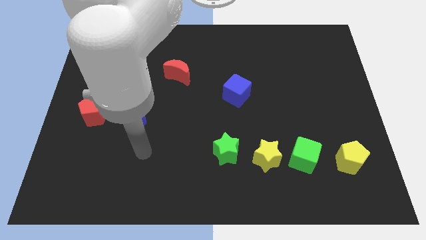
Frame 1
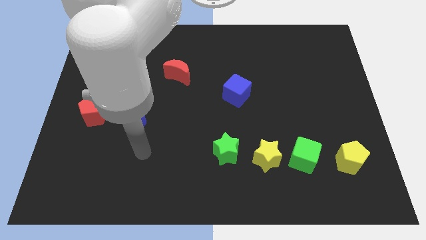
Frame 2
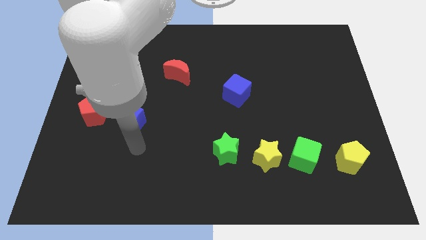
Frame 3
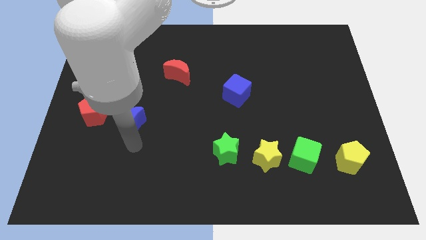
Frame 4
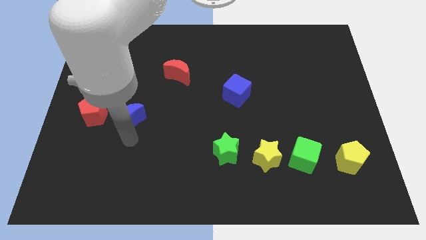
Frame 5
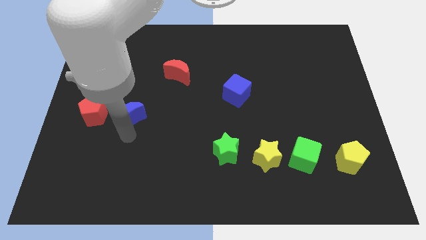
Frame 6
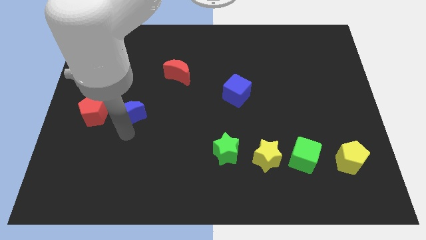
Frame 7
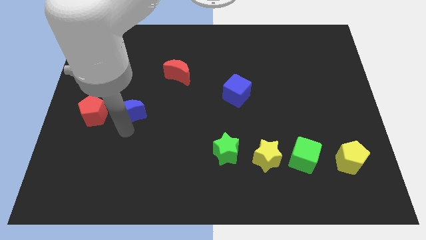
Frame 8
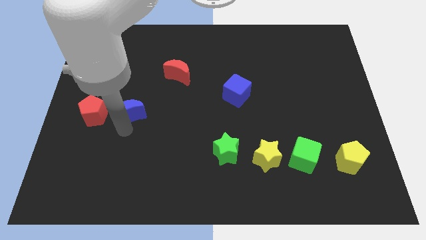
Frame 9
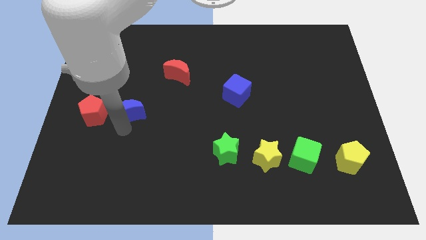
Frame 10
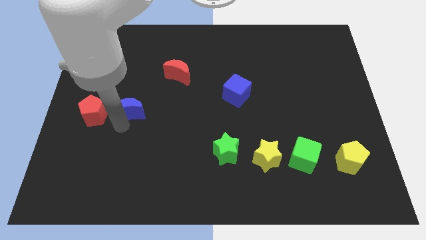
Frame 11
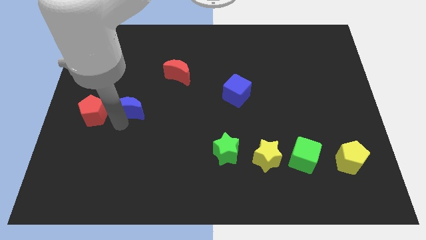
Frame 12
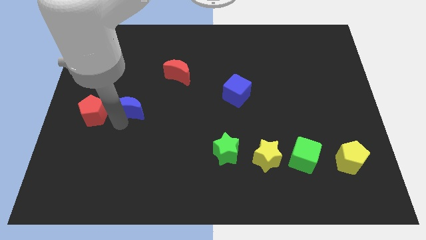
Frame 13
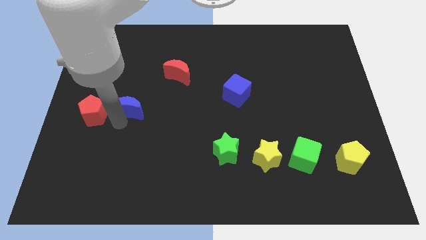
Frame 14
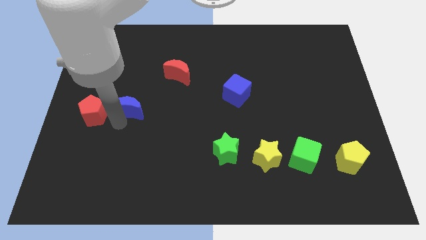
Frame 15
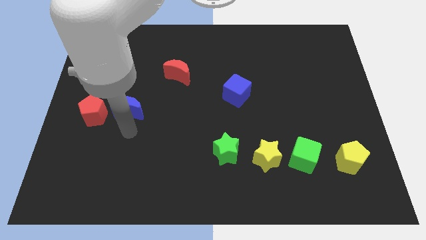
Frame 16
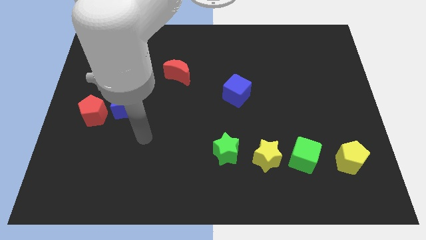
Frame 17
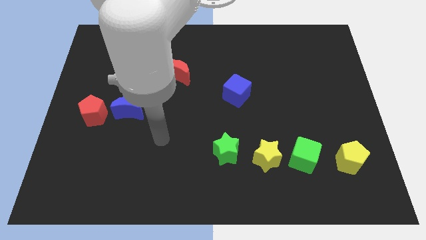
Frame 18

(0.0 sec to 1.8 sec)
place the blue moon to the right of the red pentagon

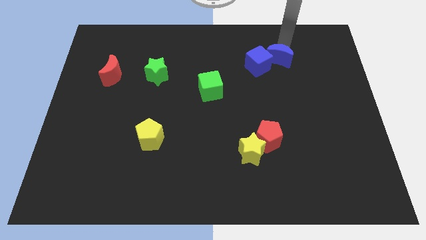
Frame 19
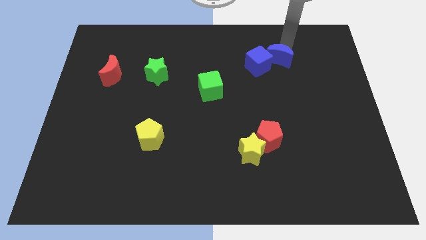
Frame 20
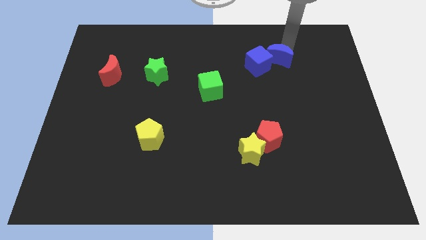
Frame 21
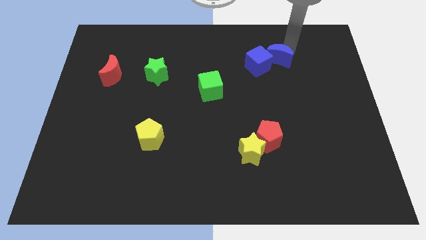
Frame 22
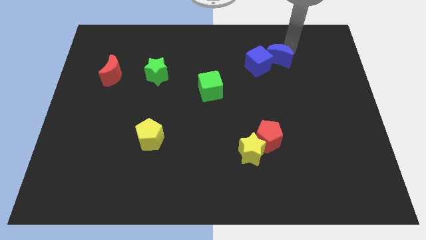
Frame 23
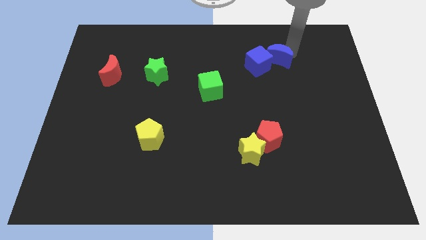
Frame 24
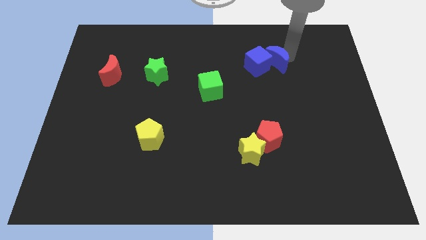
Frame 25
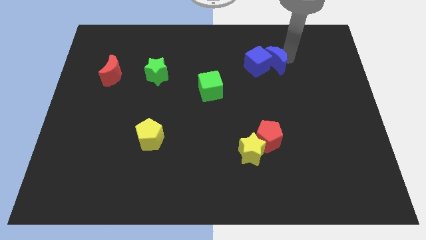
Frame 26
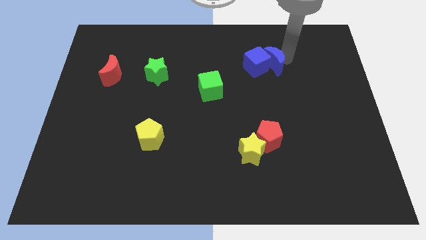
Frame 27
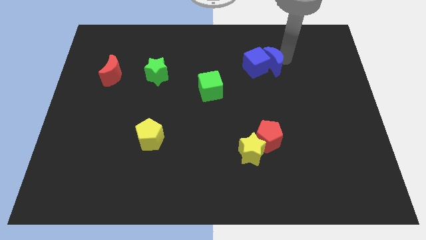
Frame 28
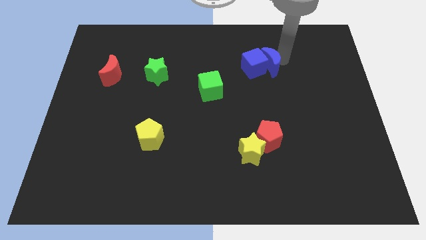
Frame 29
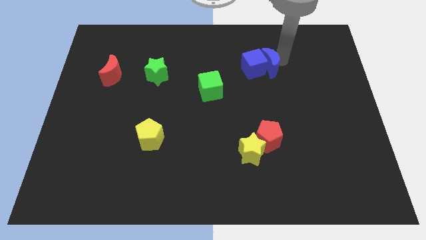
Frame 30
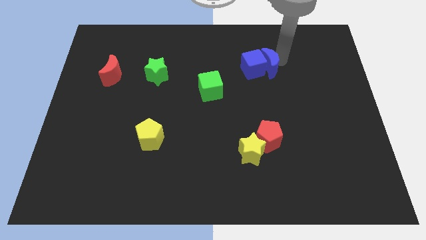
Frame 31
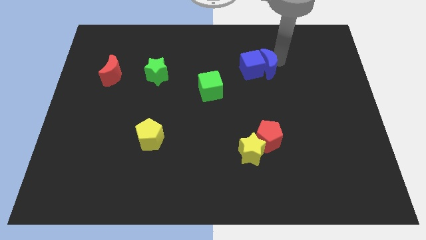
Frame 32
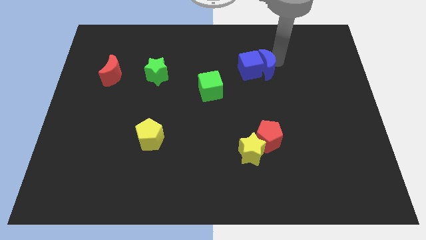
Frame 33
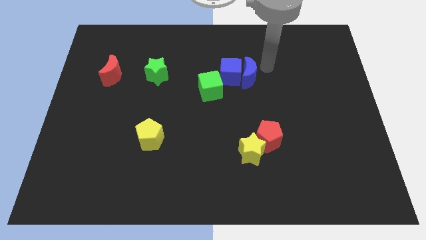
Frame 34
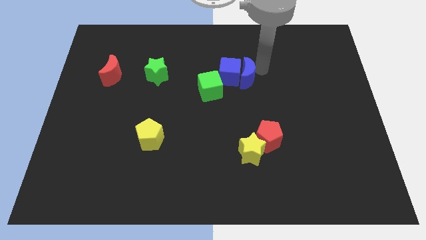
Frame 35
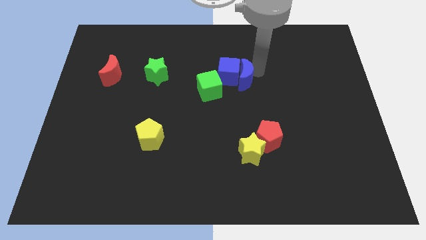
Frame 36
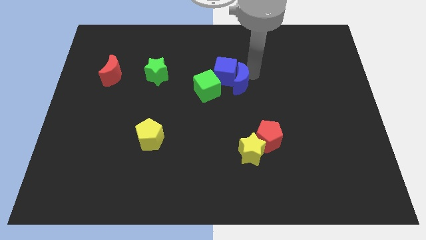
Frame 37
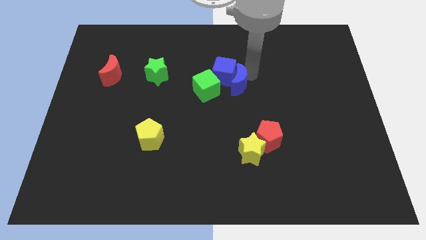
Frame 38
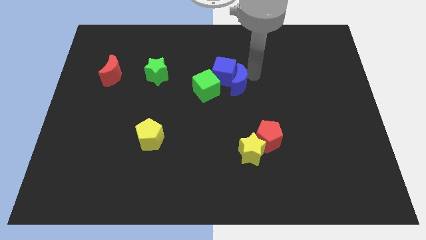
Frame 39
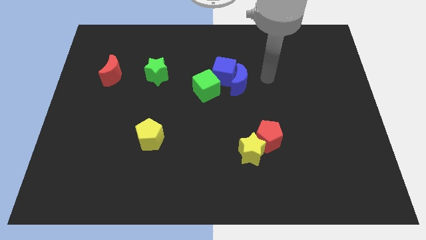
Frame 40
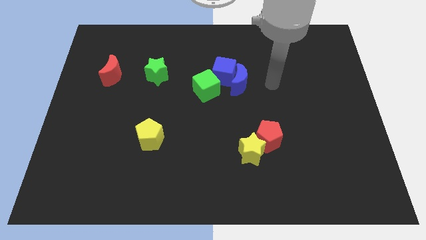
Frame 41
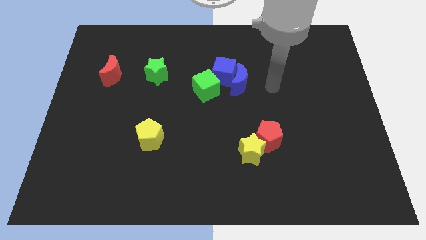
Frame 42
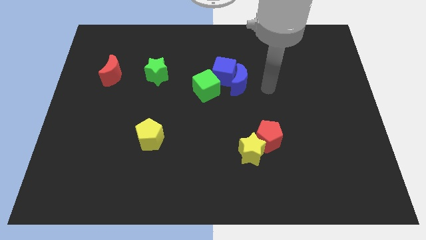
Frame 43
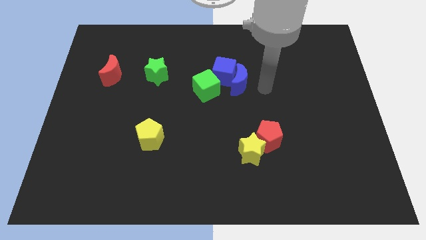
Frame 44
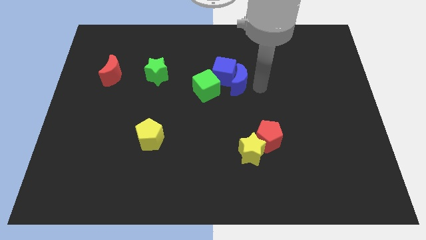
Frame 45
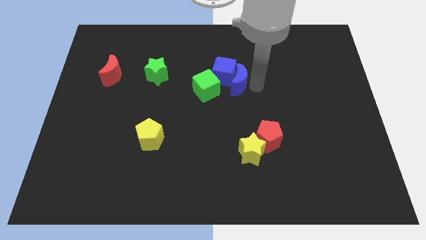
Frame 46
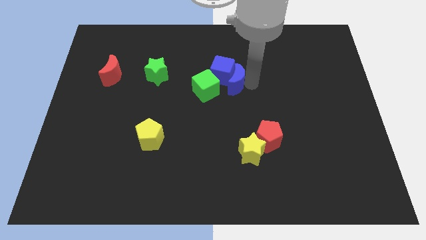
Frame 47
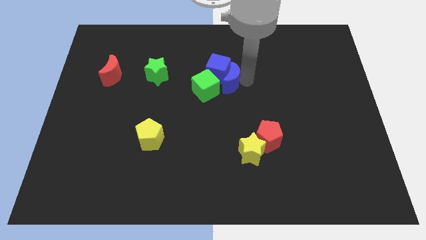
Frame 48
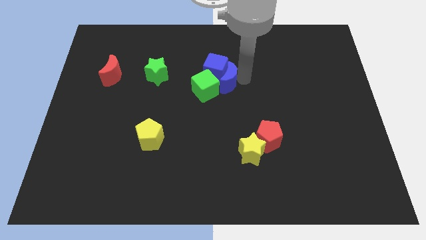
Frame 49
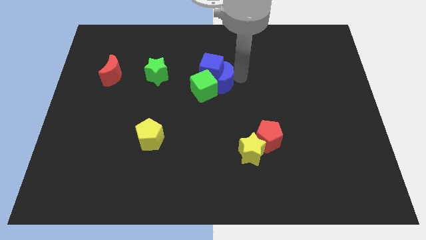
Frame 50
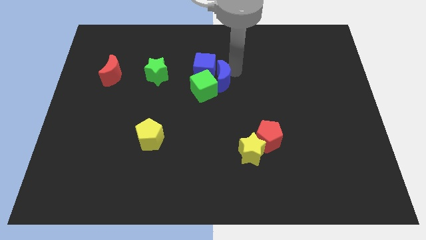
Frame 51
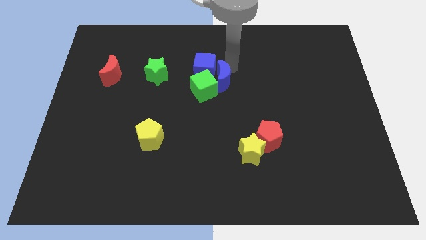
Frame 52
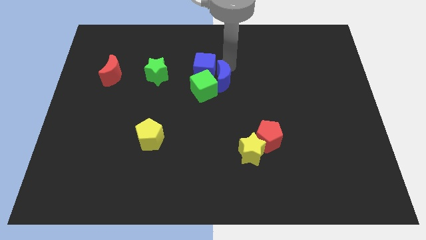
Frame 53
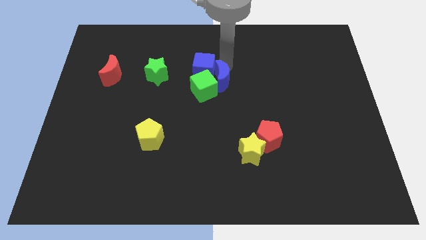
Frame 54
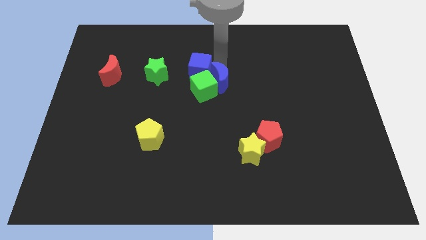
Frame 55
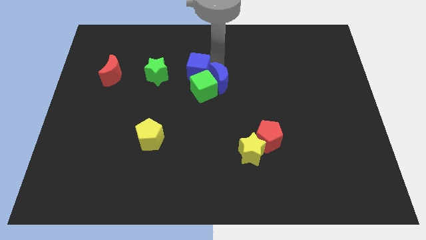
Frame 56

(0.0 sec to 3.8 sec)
push blue blocks towards the green cube

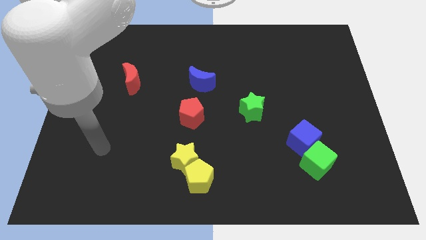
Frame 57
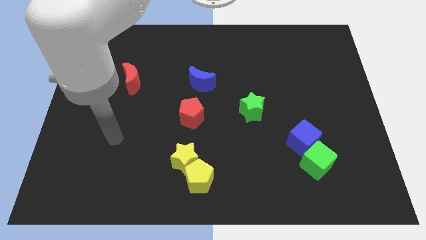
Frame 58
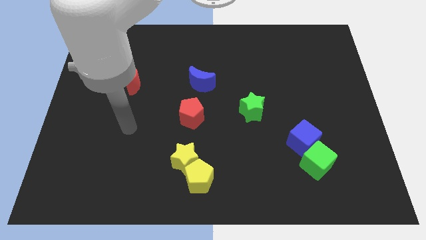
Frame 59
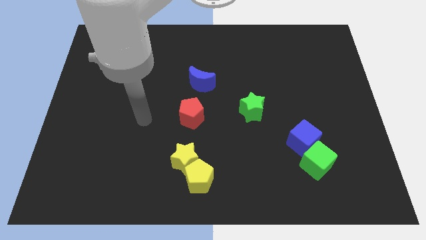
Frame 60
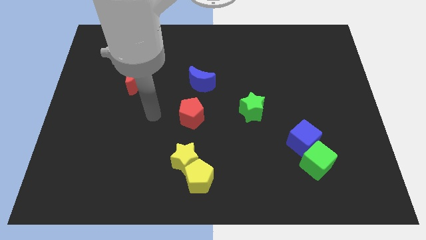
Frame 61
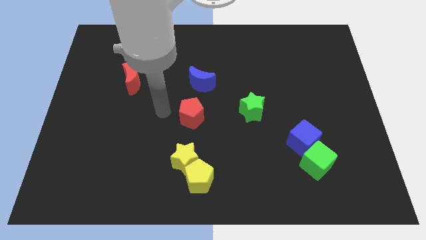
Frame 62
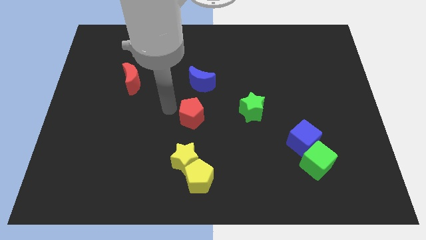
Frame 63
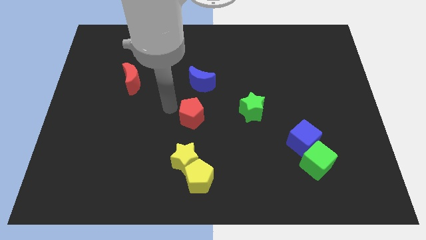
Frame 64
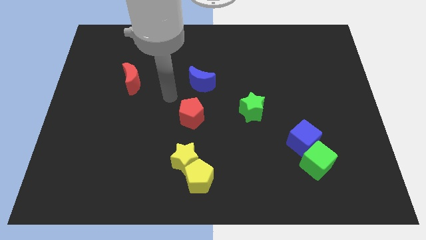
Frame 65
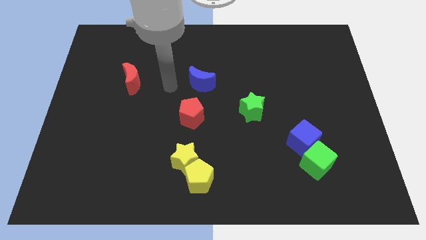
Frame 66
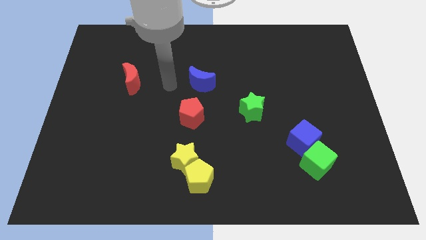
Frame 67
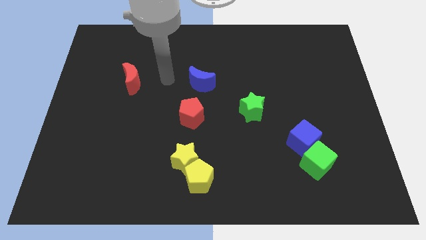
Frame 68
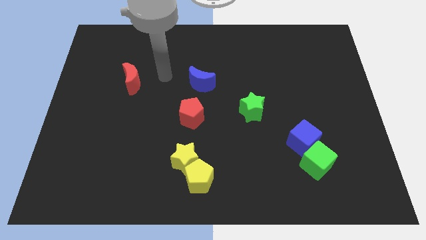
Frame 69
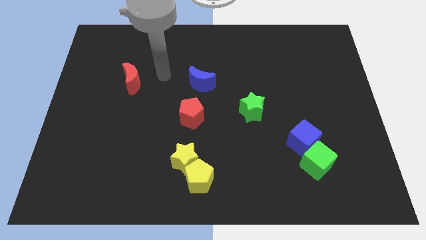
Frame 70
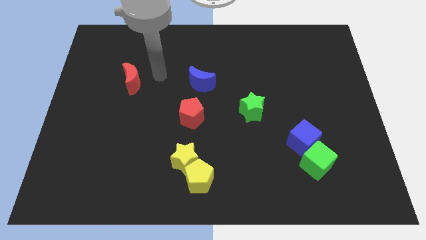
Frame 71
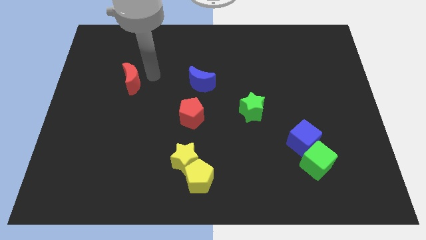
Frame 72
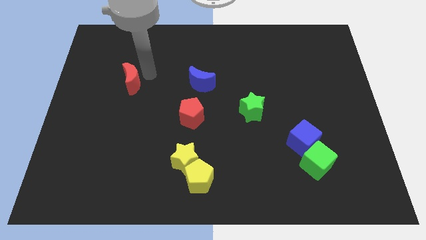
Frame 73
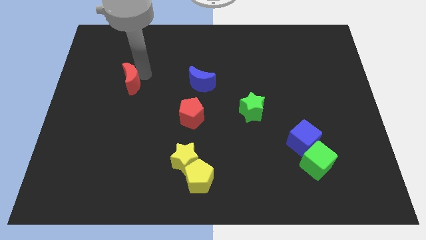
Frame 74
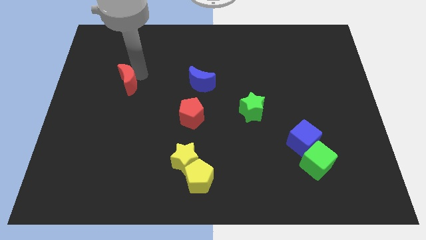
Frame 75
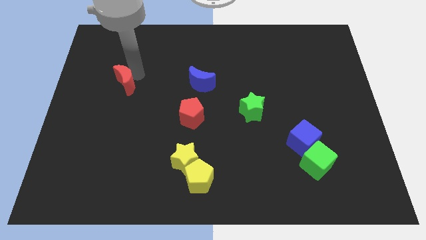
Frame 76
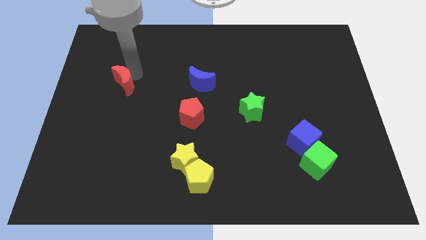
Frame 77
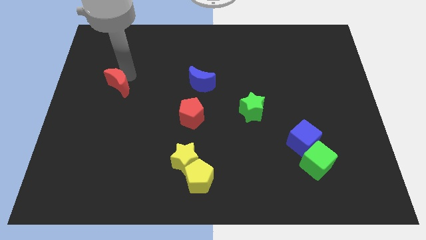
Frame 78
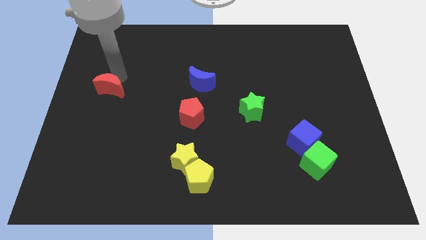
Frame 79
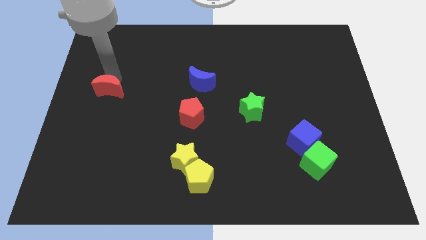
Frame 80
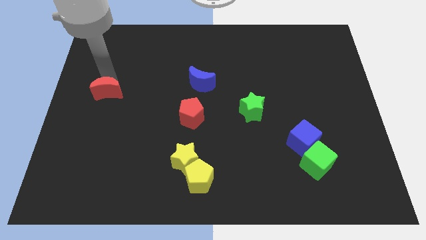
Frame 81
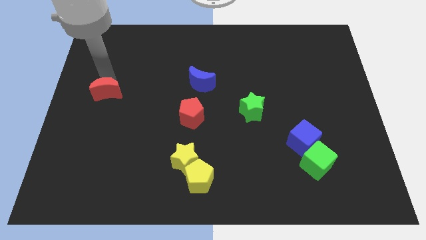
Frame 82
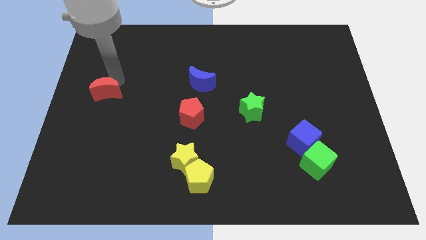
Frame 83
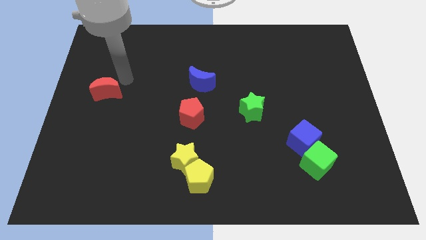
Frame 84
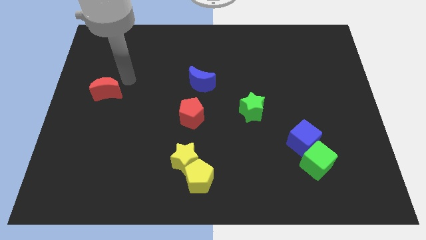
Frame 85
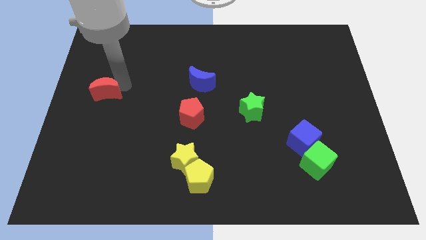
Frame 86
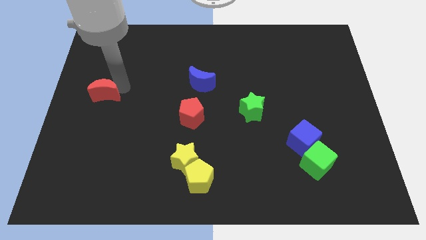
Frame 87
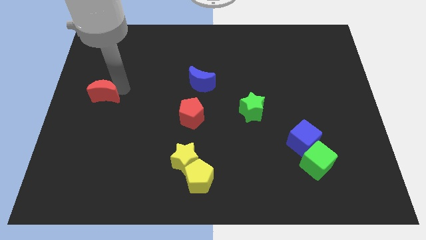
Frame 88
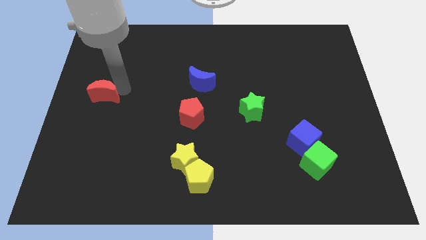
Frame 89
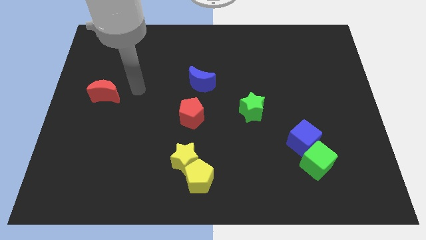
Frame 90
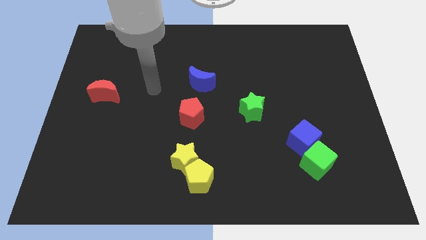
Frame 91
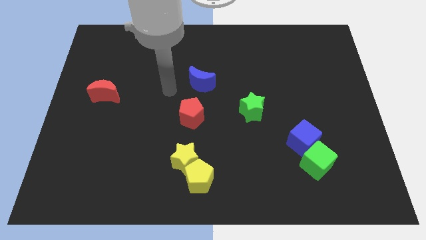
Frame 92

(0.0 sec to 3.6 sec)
push red moon to the bottom of the board
